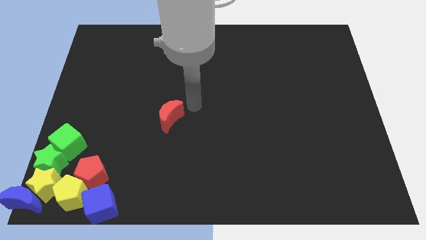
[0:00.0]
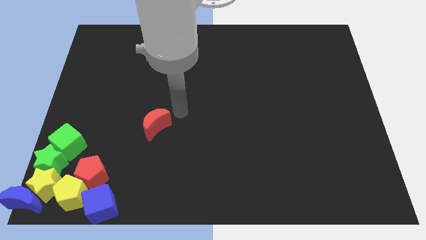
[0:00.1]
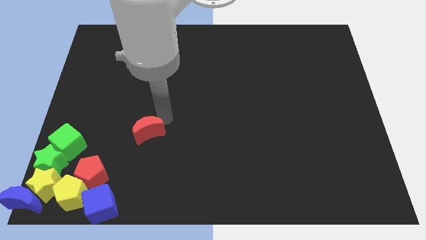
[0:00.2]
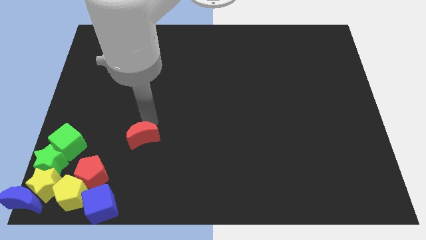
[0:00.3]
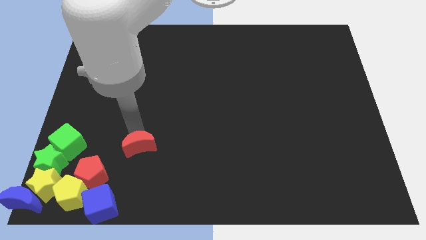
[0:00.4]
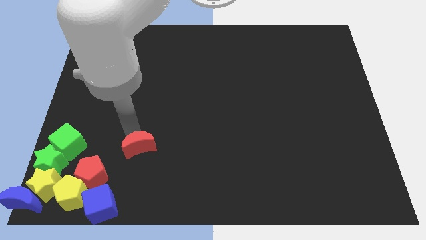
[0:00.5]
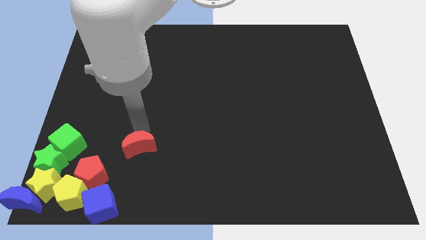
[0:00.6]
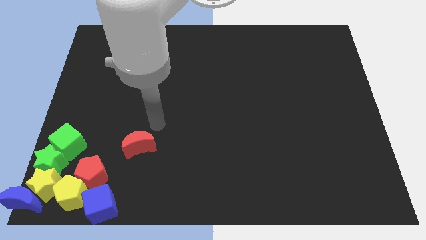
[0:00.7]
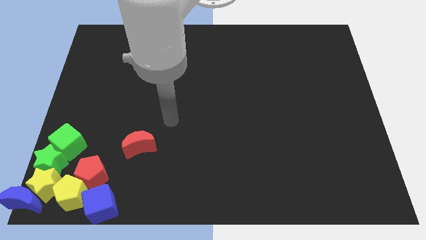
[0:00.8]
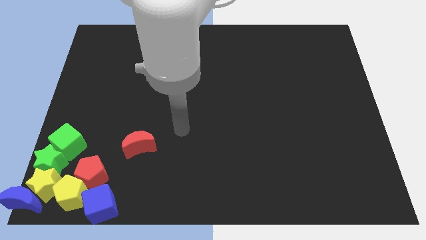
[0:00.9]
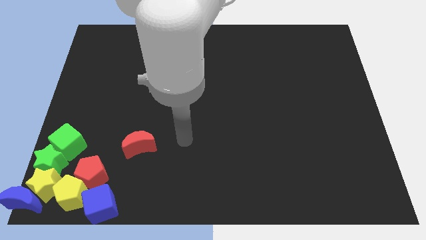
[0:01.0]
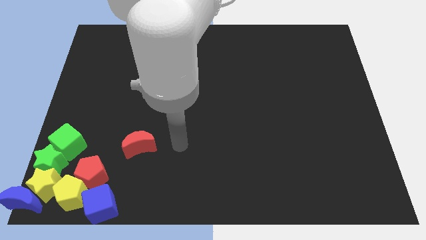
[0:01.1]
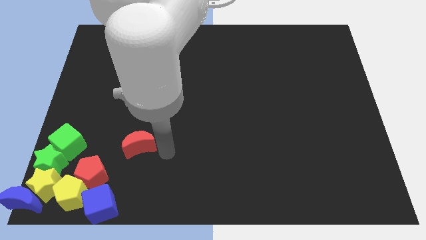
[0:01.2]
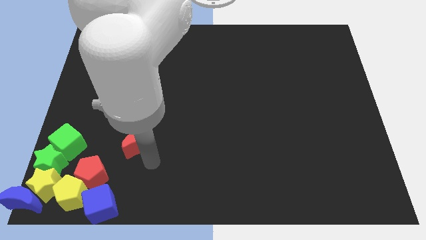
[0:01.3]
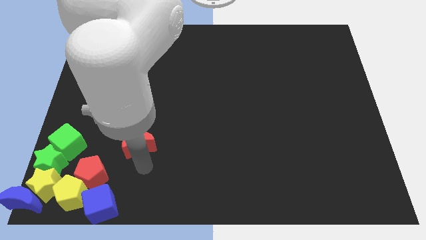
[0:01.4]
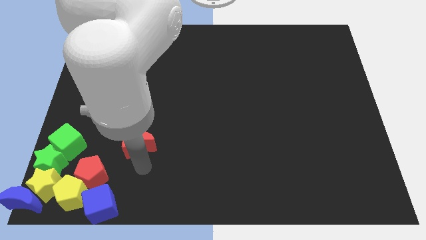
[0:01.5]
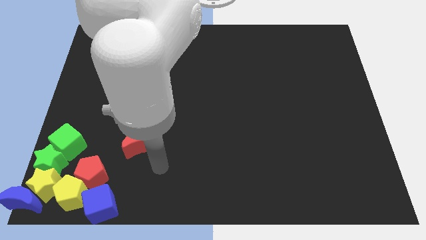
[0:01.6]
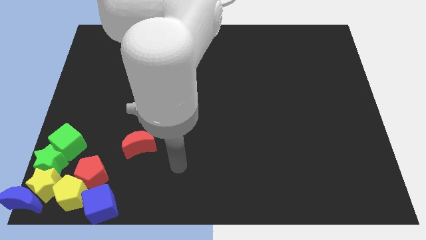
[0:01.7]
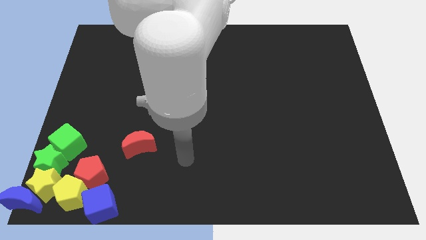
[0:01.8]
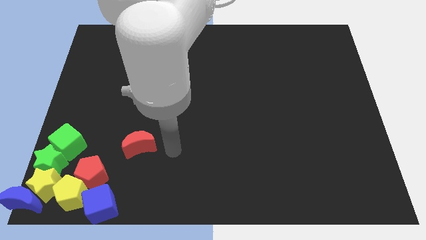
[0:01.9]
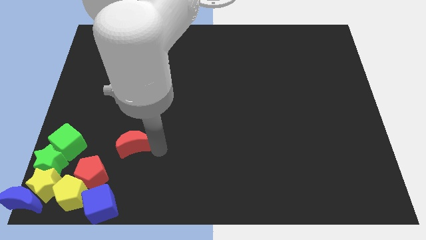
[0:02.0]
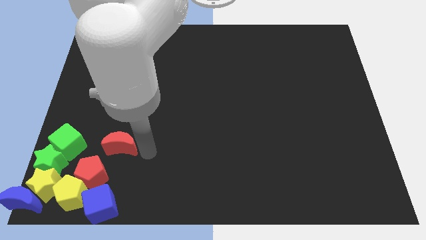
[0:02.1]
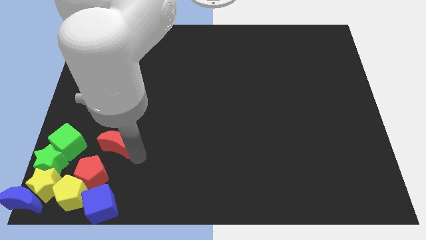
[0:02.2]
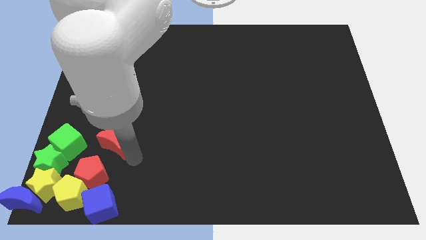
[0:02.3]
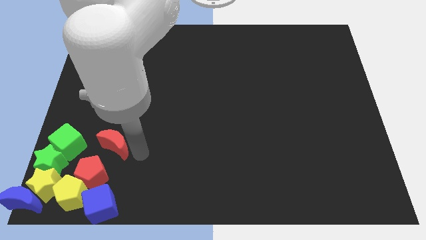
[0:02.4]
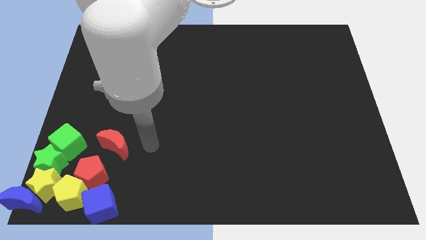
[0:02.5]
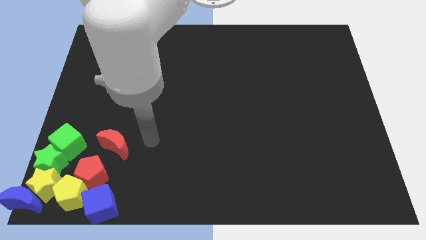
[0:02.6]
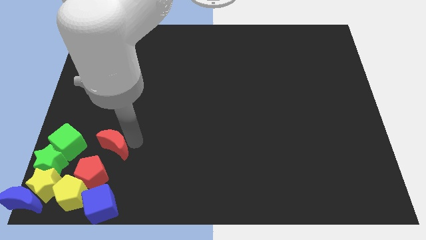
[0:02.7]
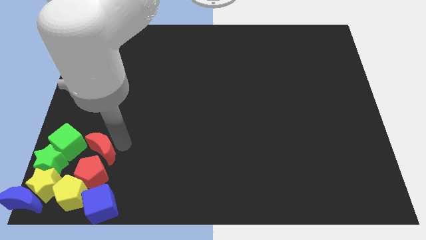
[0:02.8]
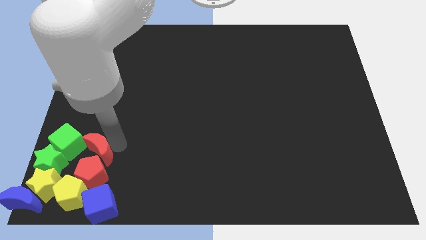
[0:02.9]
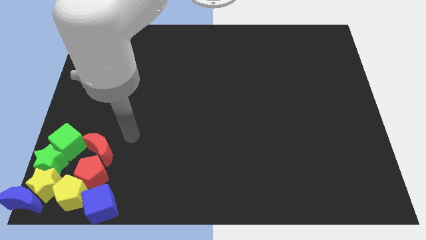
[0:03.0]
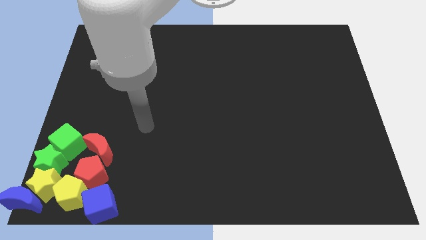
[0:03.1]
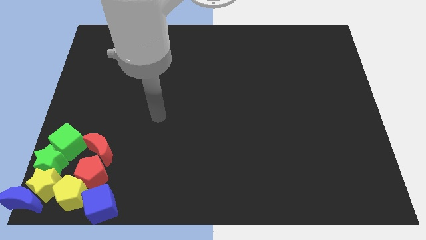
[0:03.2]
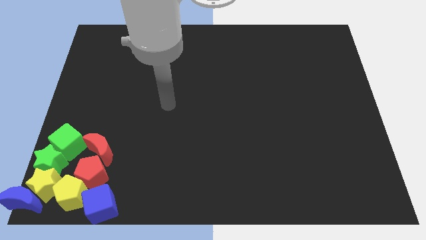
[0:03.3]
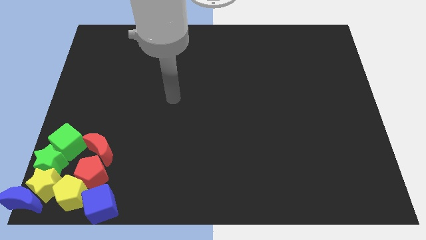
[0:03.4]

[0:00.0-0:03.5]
move the red crescent towards the bottom left of the board

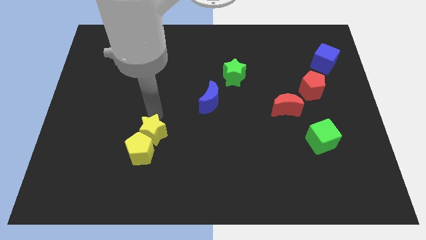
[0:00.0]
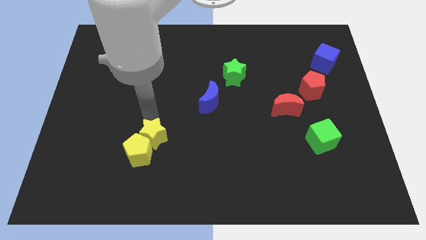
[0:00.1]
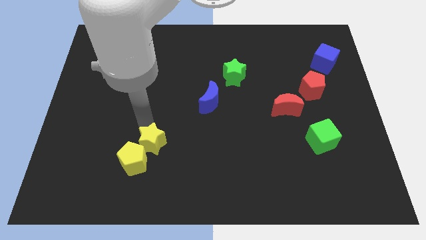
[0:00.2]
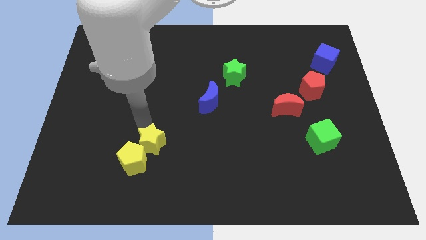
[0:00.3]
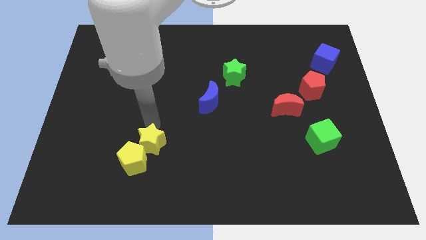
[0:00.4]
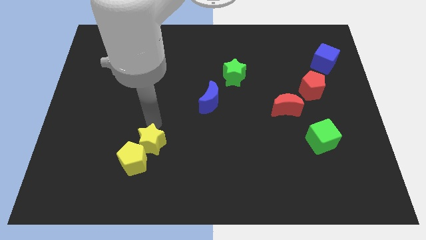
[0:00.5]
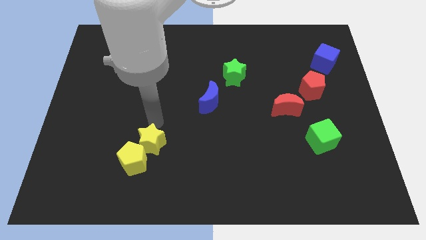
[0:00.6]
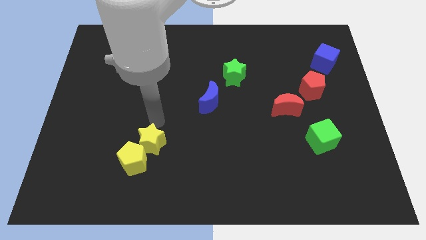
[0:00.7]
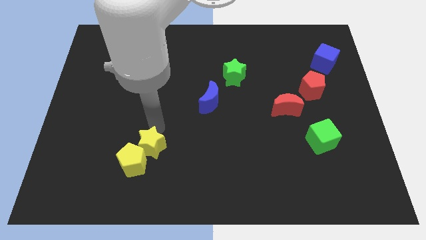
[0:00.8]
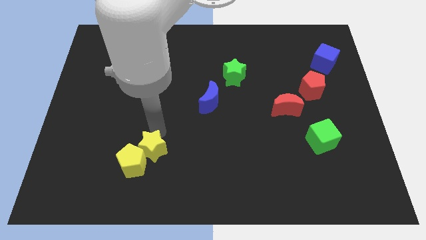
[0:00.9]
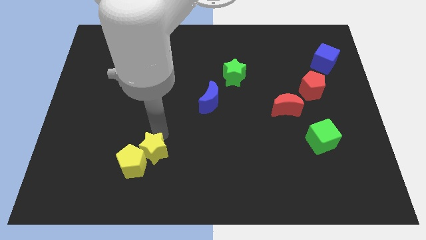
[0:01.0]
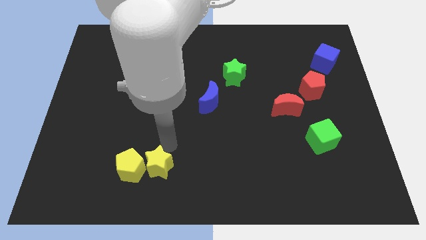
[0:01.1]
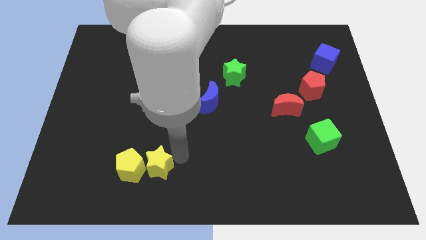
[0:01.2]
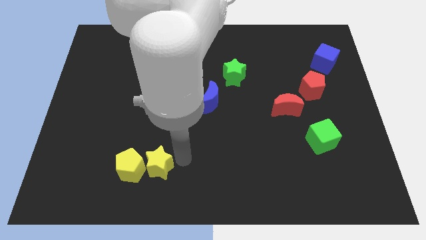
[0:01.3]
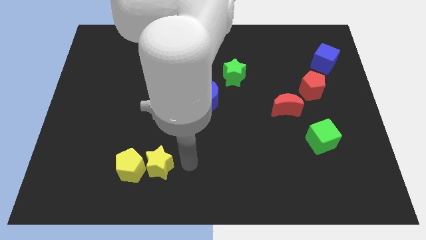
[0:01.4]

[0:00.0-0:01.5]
push the yellow star to the right of the yellow pentagon

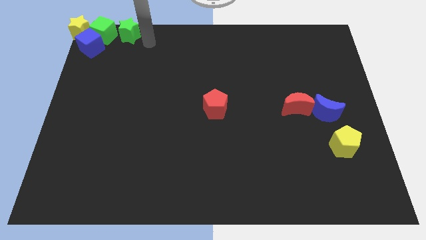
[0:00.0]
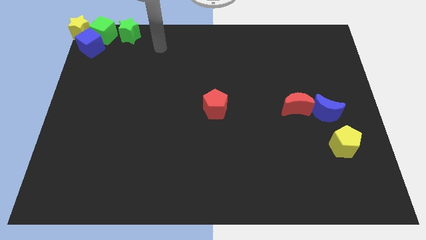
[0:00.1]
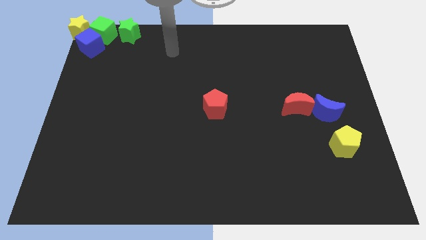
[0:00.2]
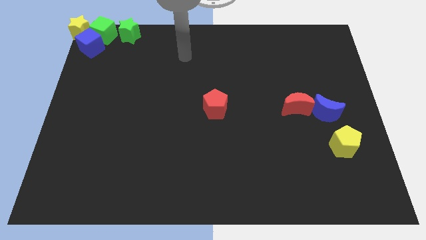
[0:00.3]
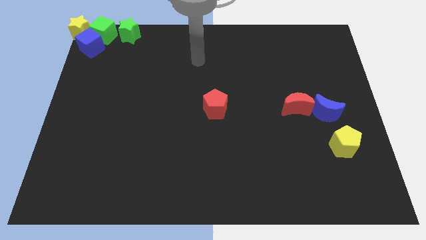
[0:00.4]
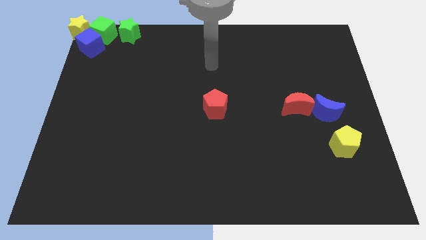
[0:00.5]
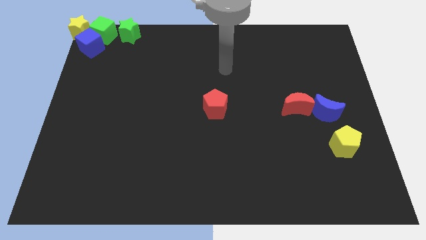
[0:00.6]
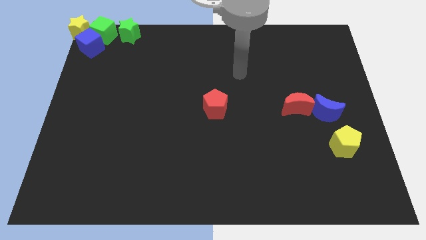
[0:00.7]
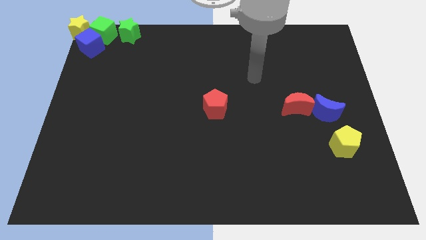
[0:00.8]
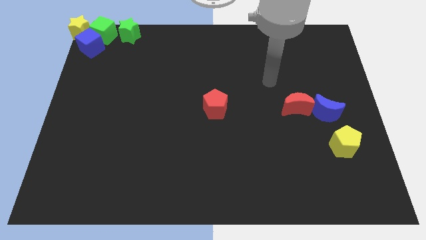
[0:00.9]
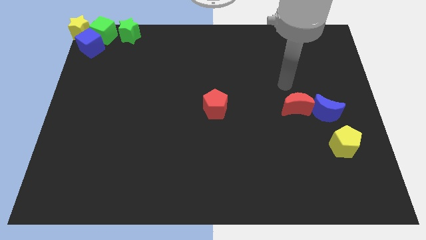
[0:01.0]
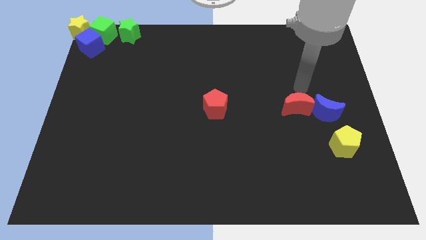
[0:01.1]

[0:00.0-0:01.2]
move your arm at the top of the red crescent

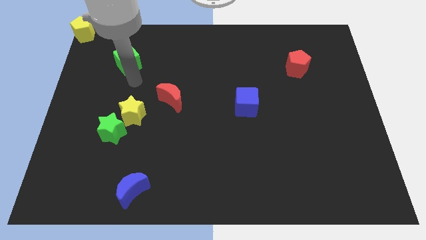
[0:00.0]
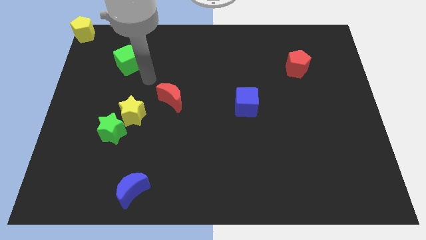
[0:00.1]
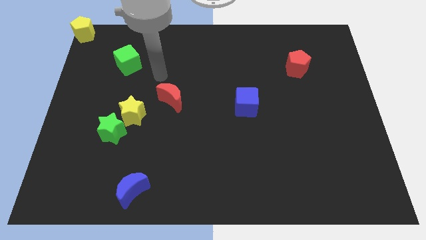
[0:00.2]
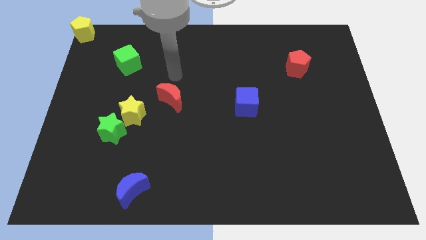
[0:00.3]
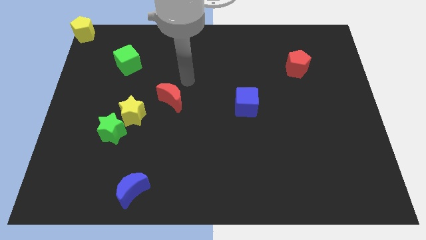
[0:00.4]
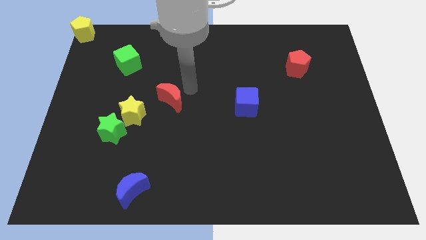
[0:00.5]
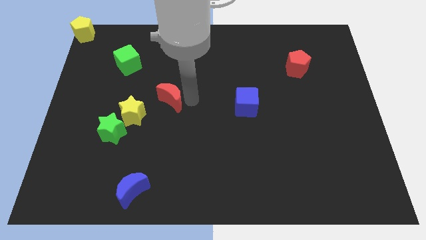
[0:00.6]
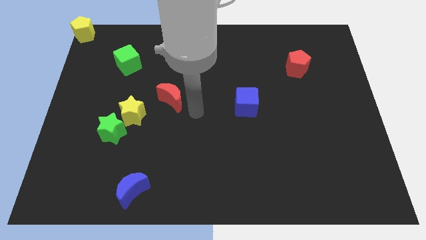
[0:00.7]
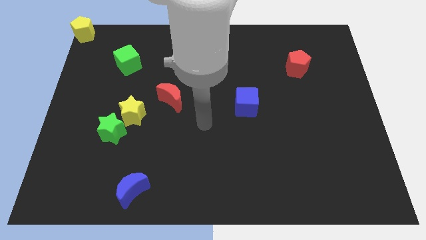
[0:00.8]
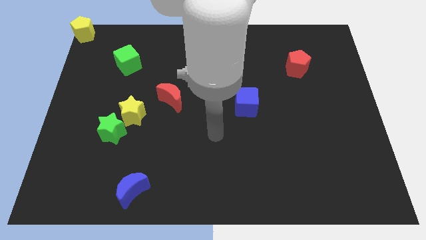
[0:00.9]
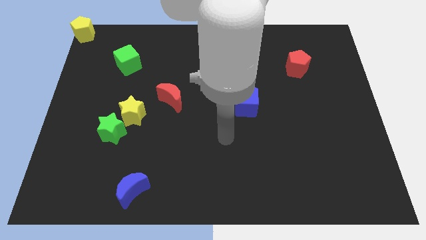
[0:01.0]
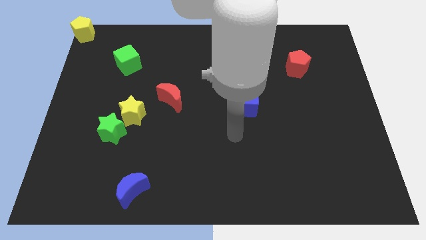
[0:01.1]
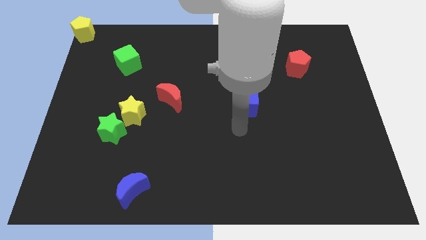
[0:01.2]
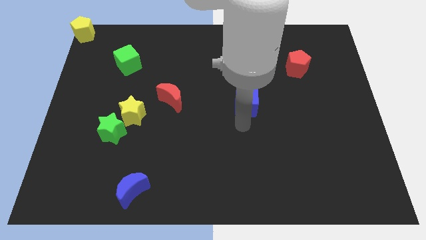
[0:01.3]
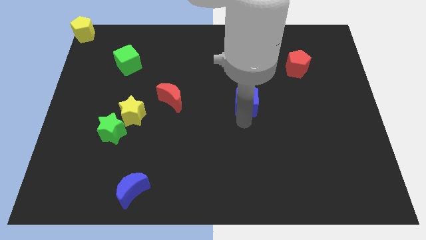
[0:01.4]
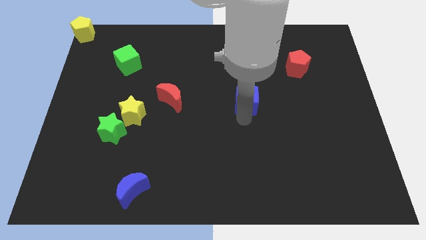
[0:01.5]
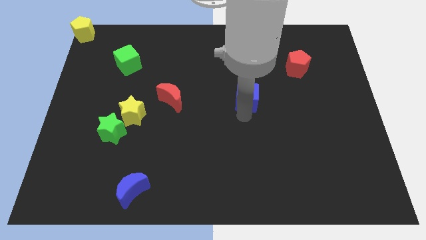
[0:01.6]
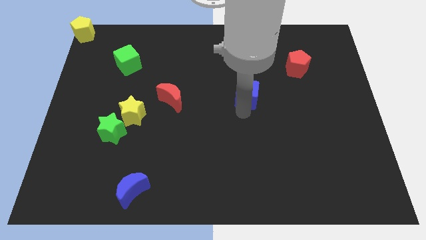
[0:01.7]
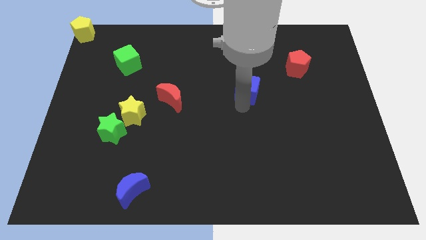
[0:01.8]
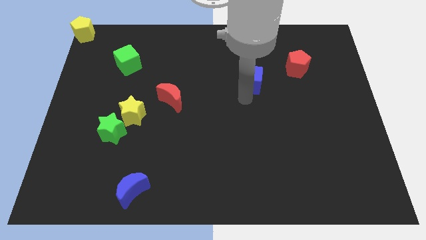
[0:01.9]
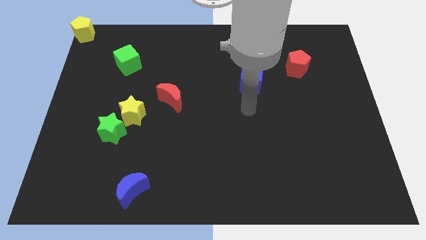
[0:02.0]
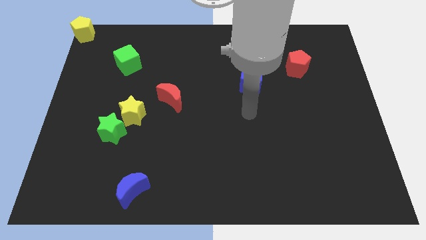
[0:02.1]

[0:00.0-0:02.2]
move the blue cube slightly up

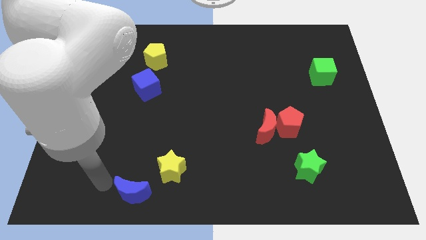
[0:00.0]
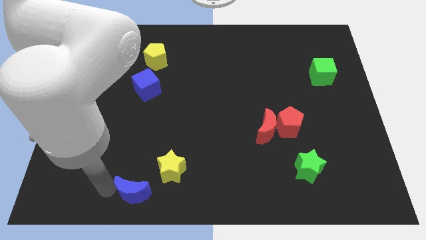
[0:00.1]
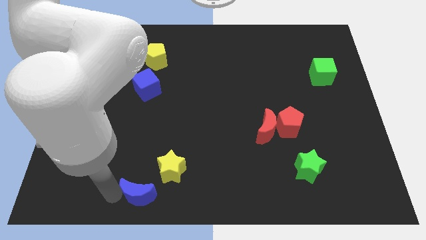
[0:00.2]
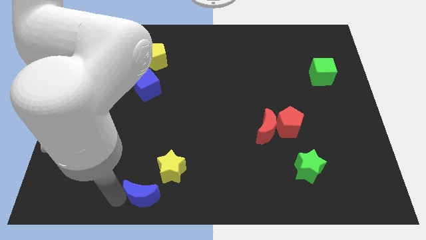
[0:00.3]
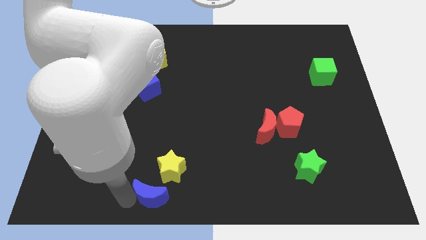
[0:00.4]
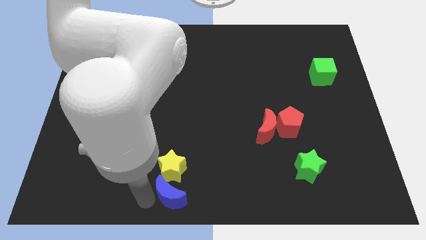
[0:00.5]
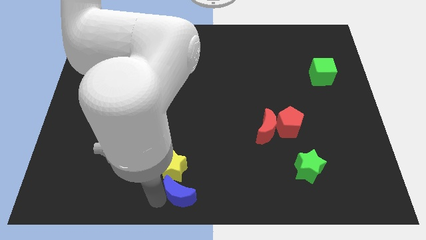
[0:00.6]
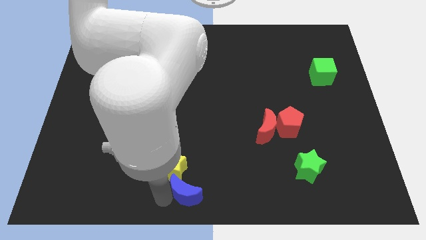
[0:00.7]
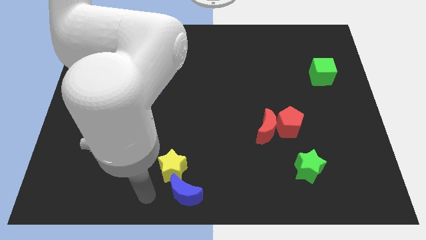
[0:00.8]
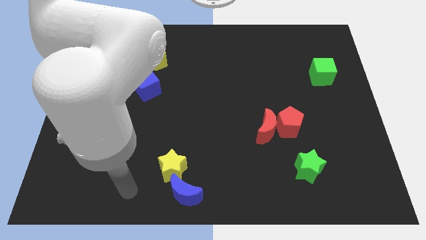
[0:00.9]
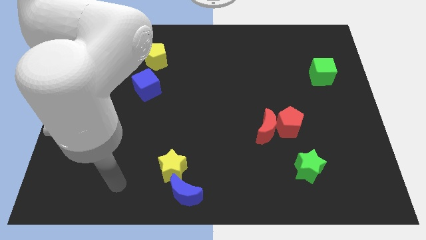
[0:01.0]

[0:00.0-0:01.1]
move the blue moon to the bottom of the yellow star
